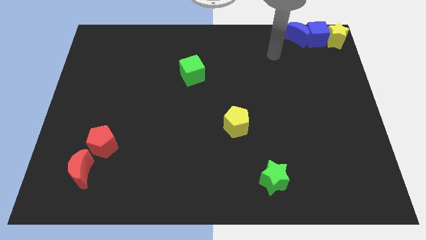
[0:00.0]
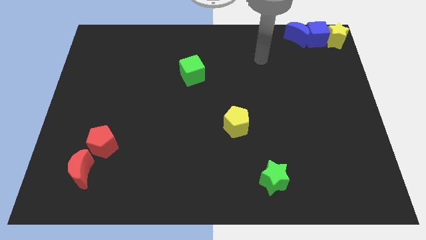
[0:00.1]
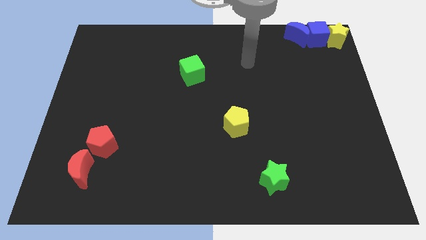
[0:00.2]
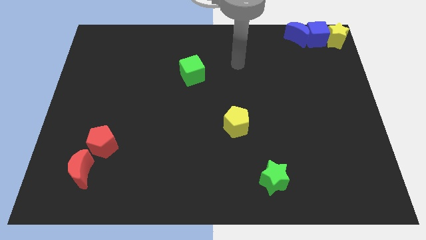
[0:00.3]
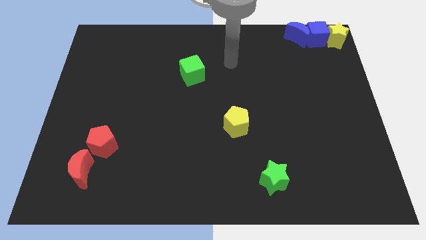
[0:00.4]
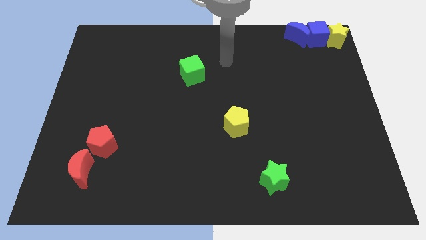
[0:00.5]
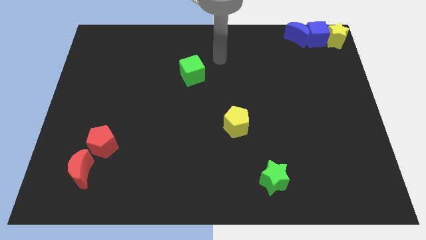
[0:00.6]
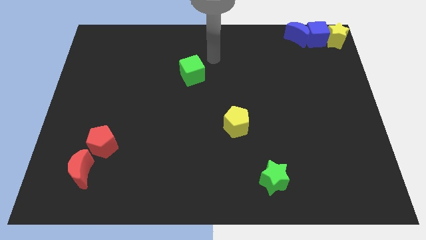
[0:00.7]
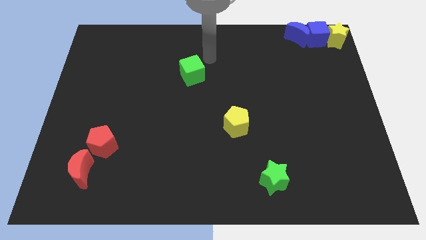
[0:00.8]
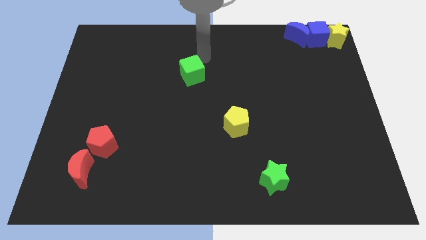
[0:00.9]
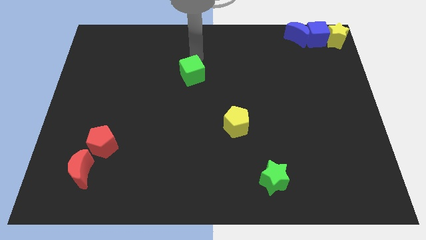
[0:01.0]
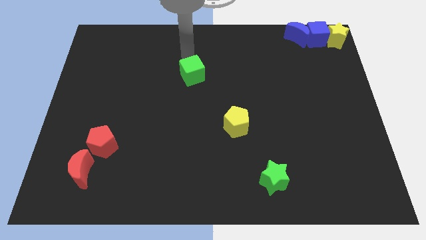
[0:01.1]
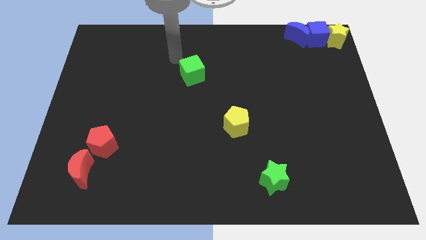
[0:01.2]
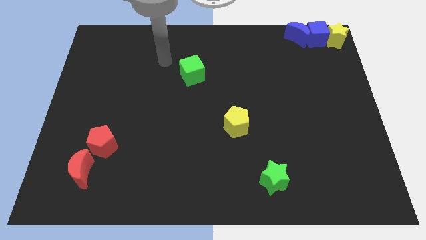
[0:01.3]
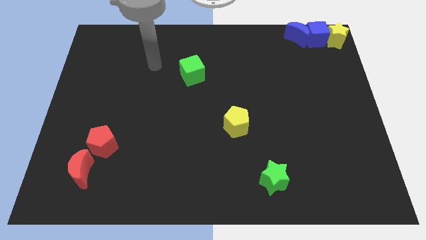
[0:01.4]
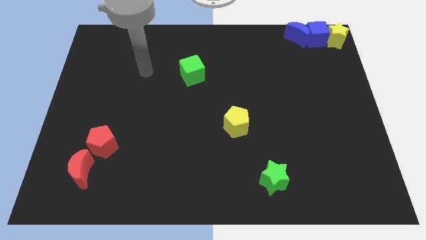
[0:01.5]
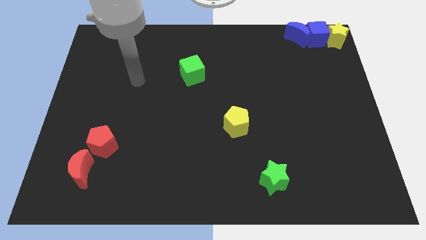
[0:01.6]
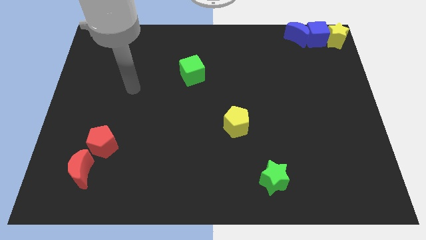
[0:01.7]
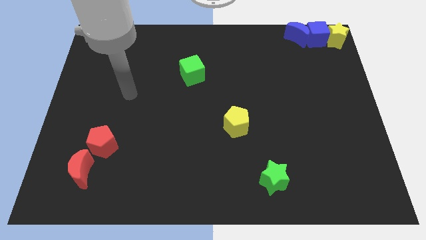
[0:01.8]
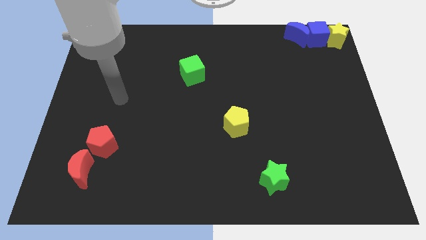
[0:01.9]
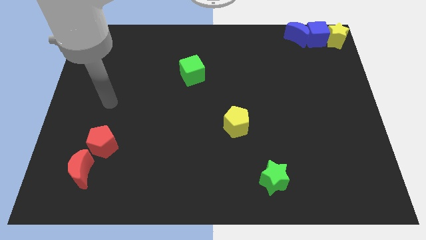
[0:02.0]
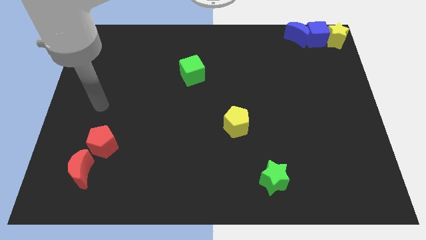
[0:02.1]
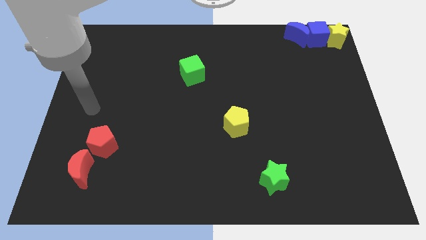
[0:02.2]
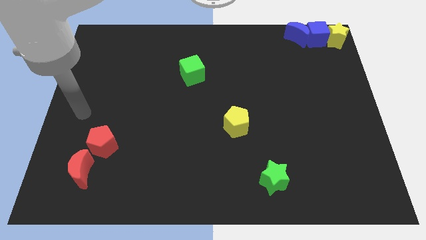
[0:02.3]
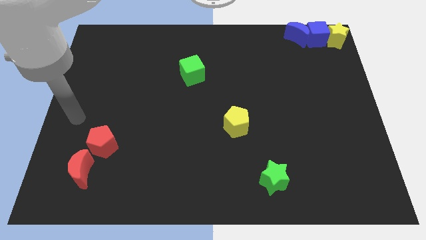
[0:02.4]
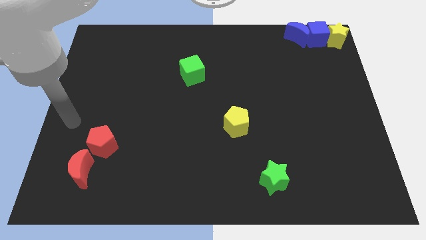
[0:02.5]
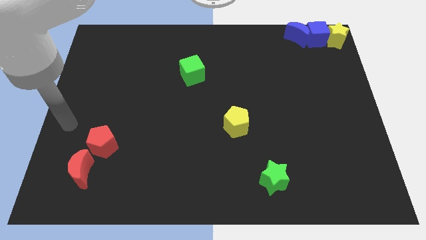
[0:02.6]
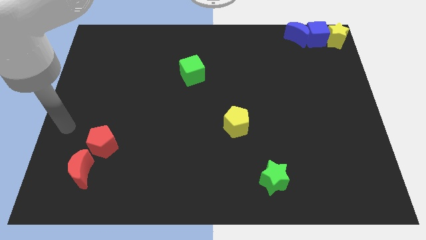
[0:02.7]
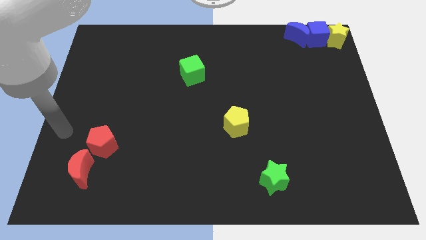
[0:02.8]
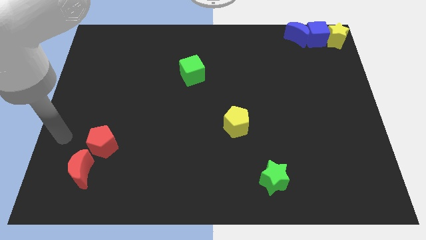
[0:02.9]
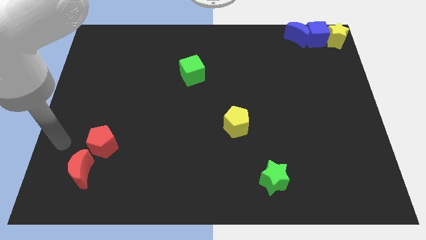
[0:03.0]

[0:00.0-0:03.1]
point your arm left to the red pentagon

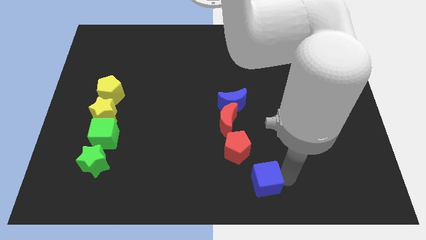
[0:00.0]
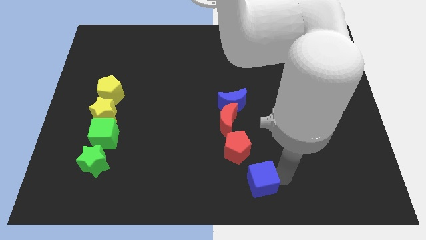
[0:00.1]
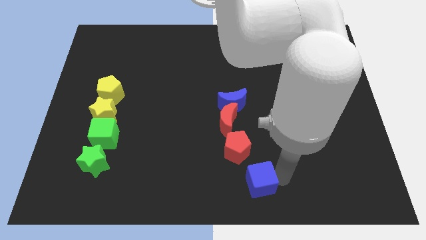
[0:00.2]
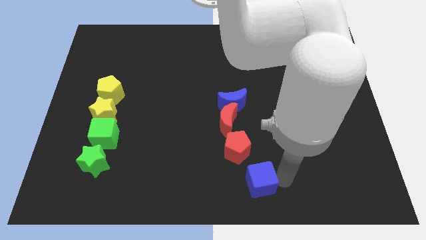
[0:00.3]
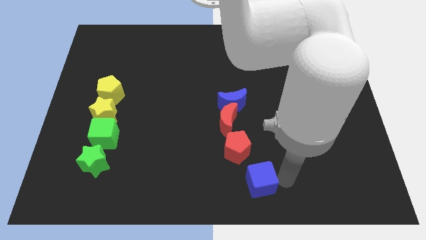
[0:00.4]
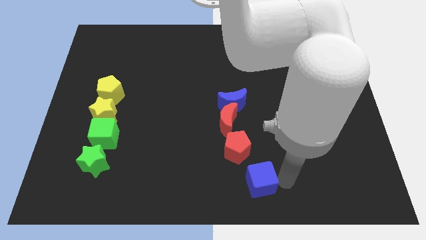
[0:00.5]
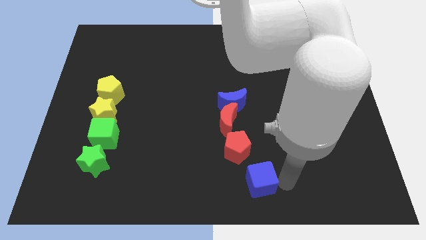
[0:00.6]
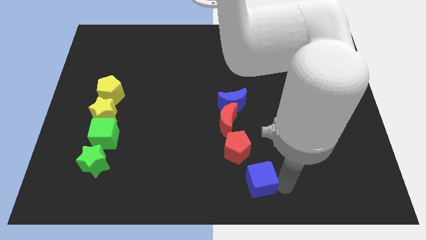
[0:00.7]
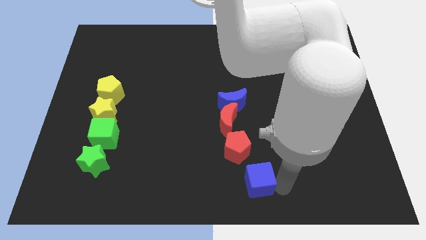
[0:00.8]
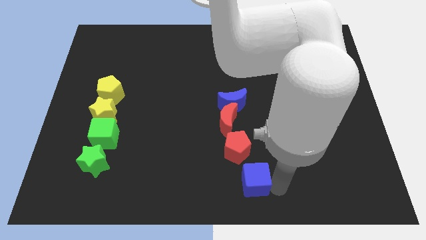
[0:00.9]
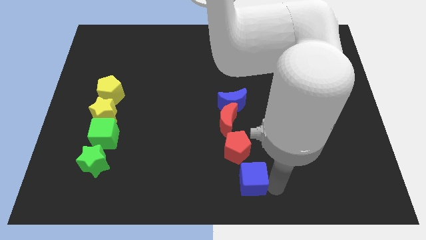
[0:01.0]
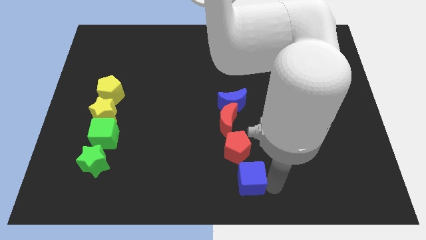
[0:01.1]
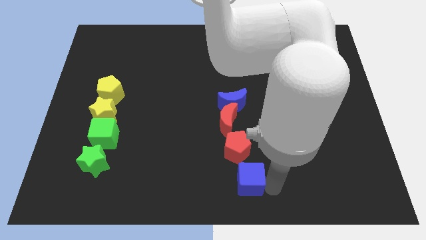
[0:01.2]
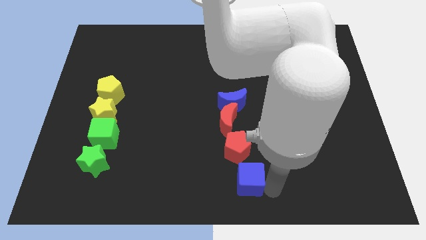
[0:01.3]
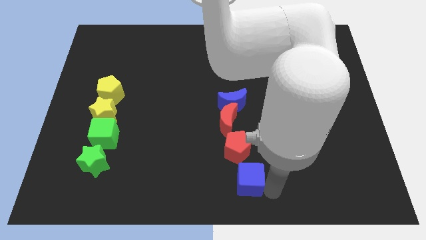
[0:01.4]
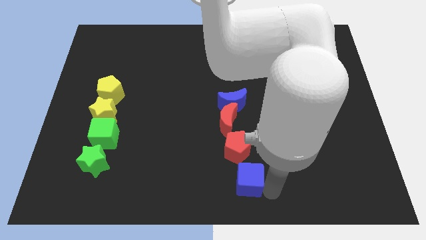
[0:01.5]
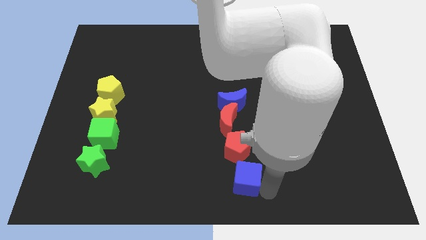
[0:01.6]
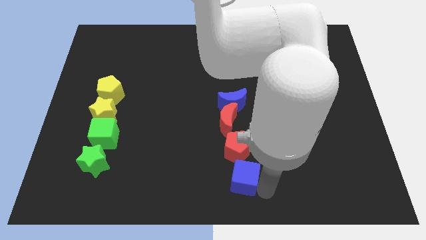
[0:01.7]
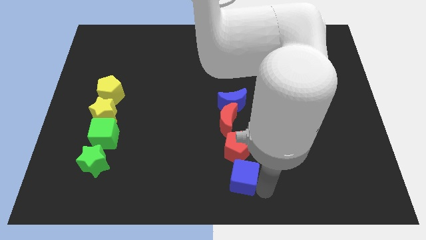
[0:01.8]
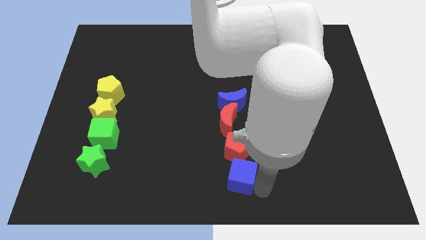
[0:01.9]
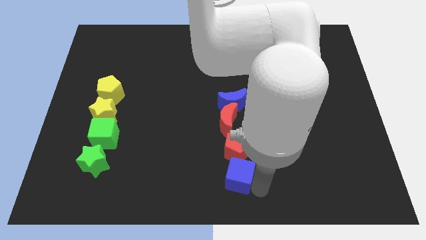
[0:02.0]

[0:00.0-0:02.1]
push blue cube towards red pentagon to make a line

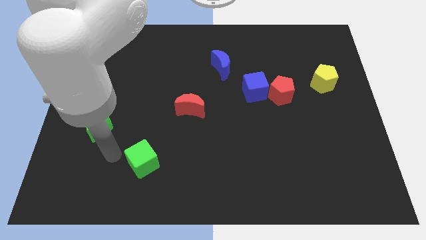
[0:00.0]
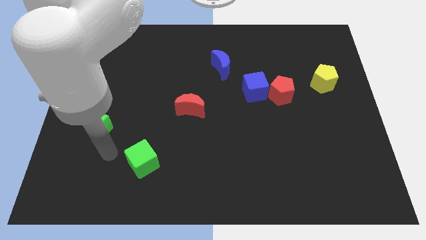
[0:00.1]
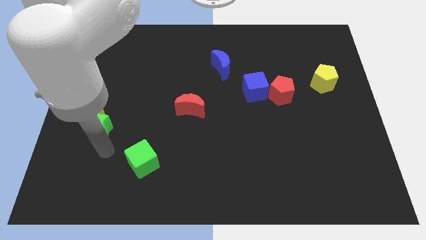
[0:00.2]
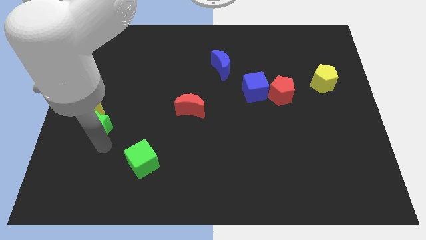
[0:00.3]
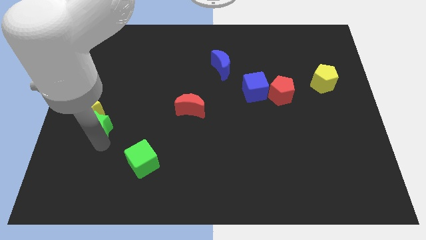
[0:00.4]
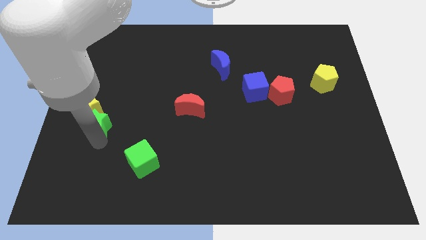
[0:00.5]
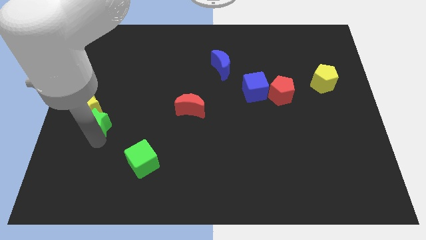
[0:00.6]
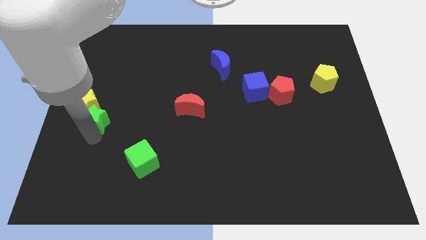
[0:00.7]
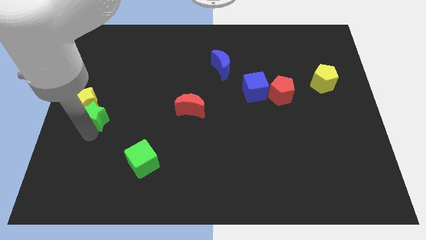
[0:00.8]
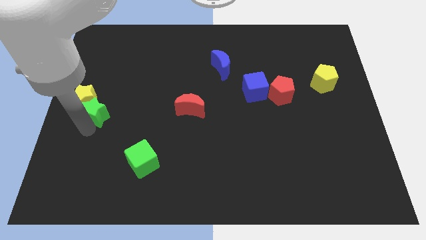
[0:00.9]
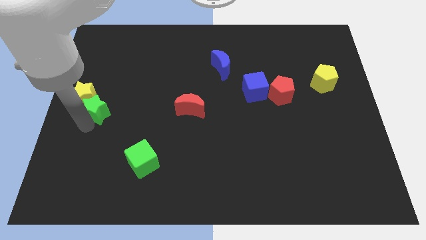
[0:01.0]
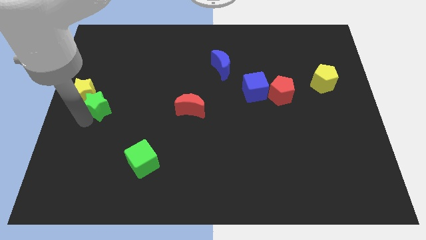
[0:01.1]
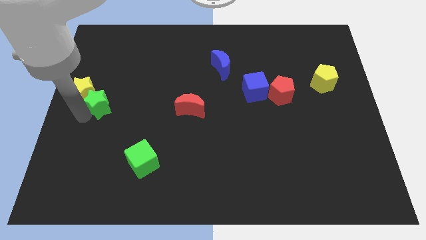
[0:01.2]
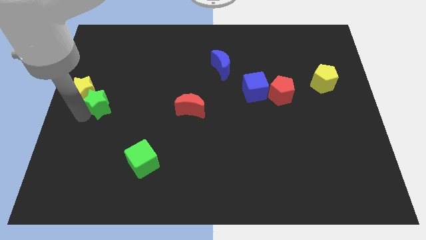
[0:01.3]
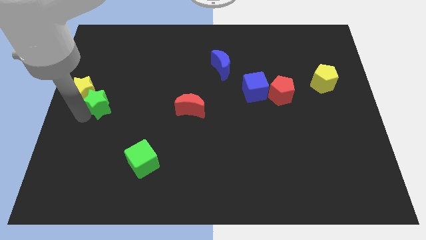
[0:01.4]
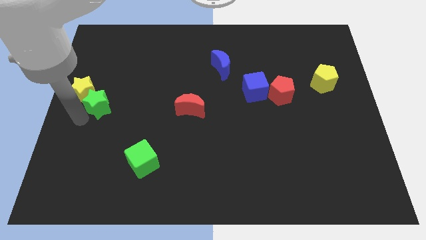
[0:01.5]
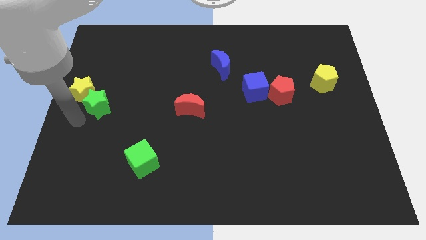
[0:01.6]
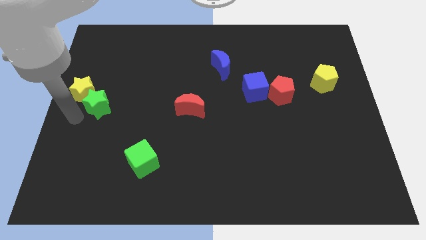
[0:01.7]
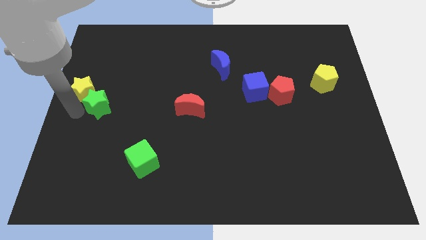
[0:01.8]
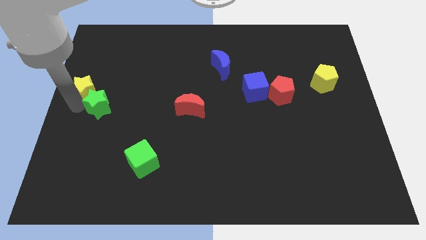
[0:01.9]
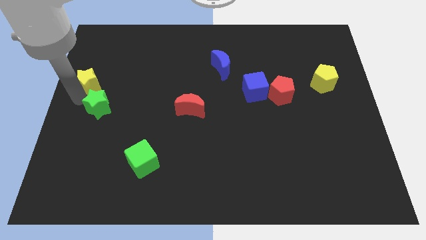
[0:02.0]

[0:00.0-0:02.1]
move the green star and yellow star towards the left center

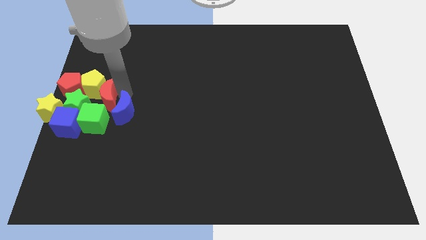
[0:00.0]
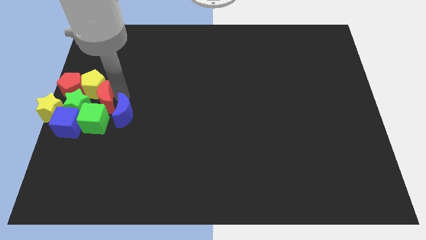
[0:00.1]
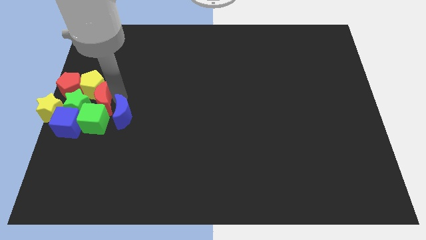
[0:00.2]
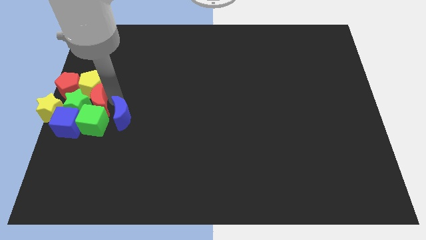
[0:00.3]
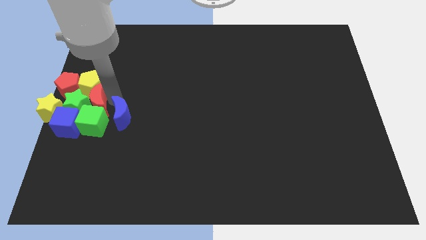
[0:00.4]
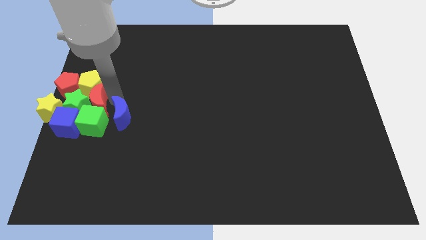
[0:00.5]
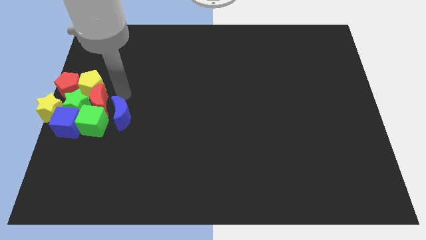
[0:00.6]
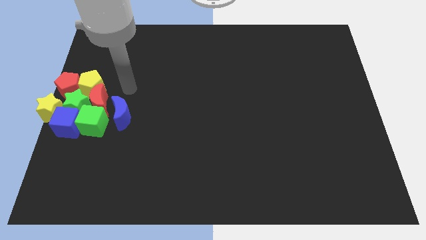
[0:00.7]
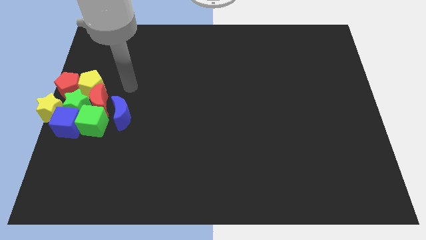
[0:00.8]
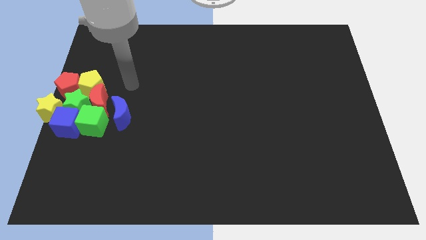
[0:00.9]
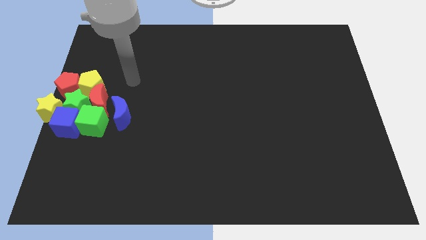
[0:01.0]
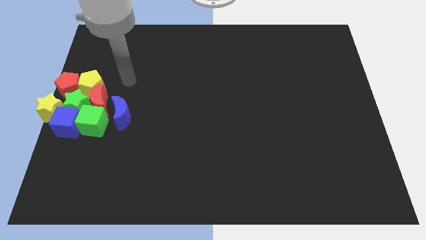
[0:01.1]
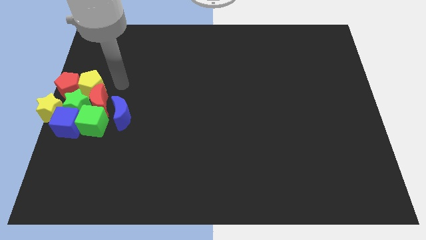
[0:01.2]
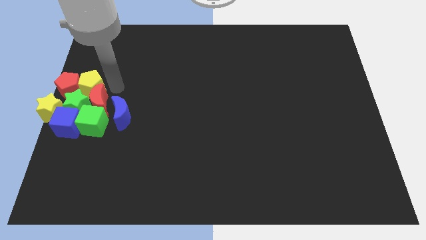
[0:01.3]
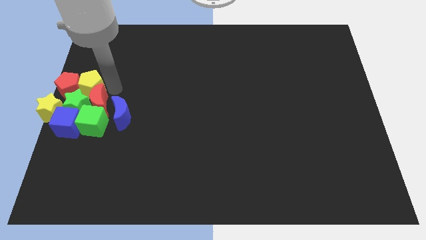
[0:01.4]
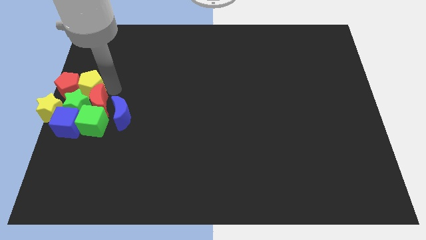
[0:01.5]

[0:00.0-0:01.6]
push the red moon into the group of blocks

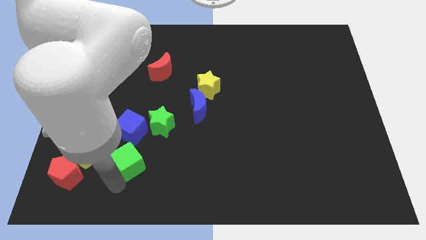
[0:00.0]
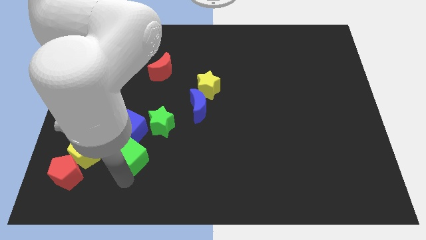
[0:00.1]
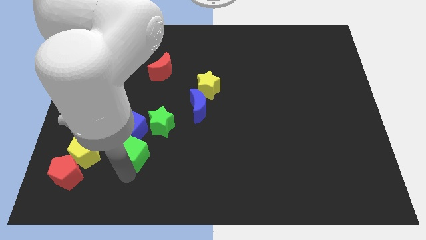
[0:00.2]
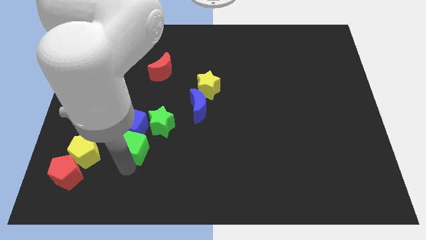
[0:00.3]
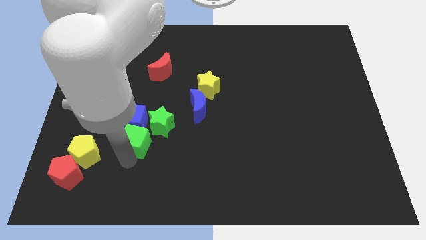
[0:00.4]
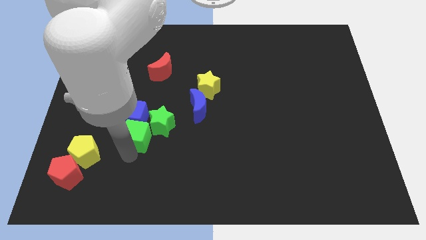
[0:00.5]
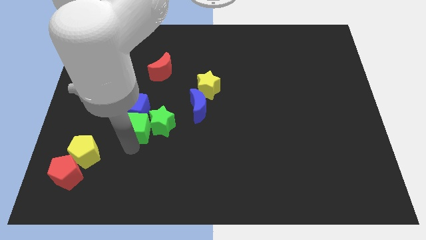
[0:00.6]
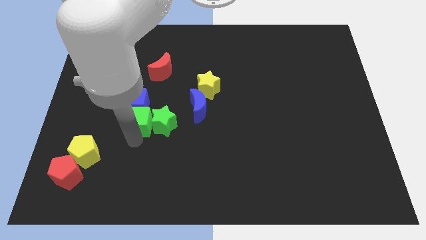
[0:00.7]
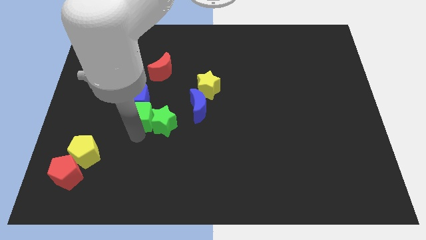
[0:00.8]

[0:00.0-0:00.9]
push the green cube along with the blue cube slightly upwards
